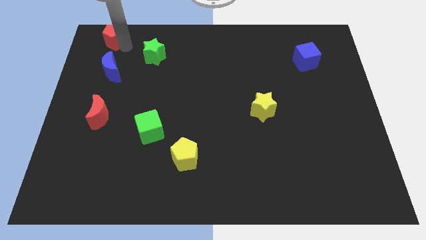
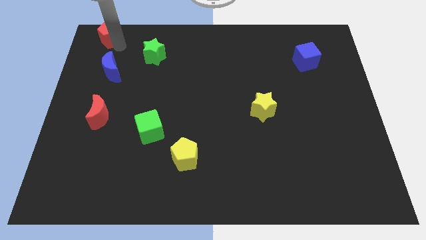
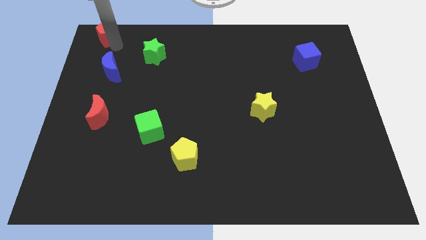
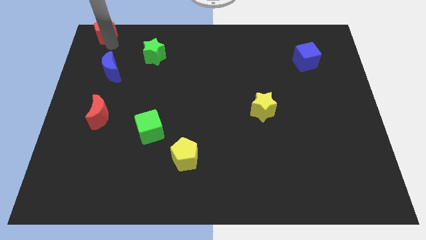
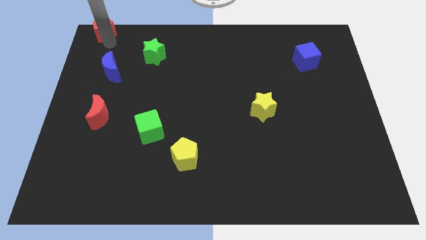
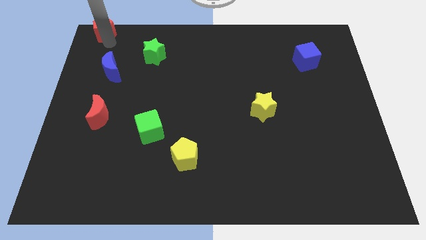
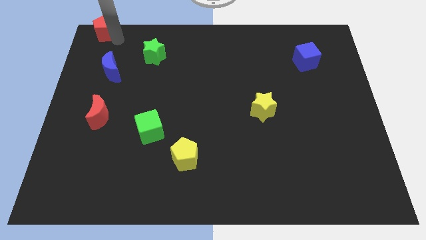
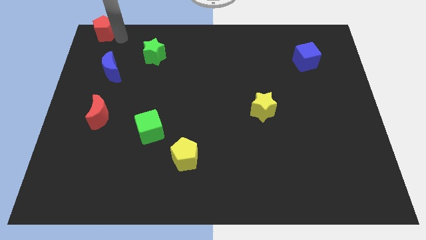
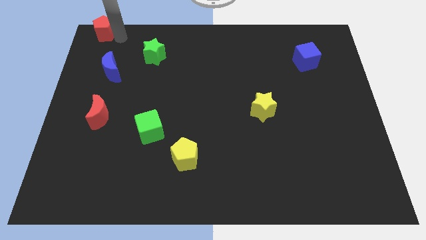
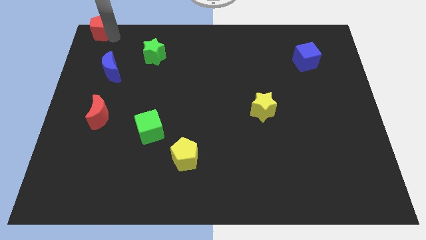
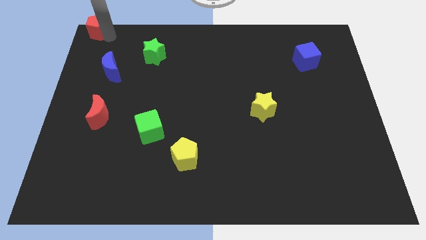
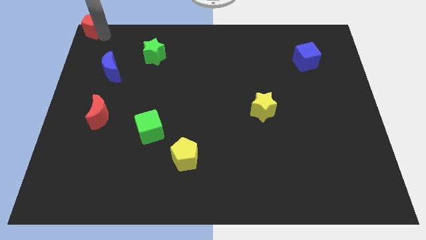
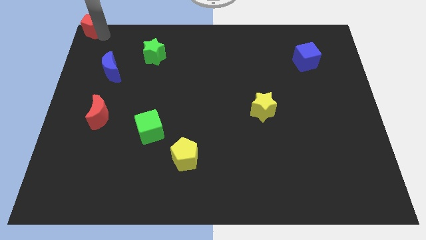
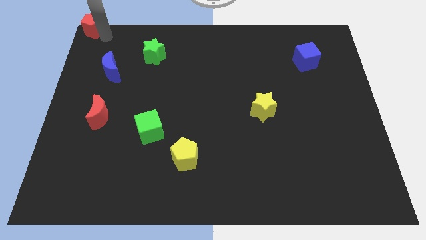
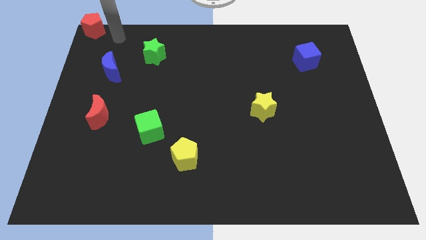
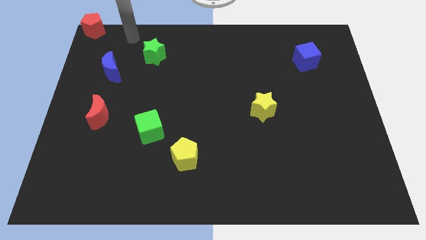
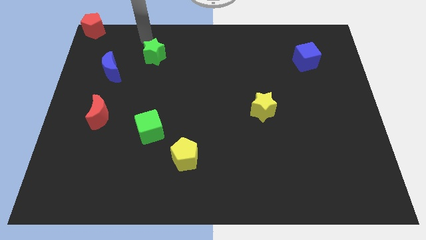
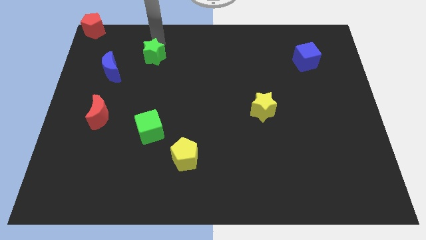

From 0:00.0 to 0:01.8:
move the red pentagon to the top left corner of the board

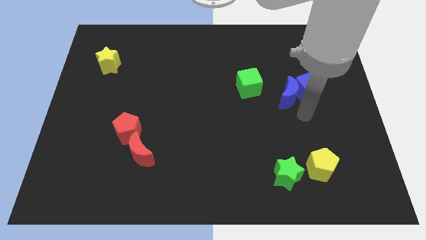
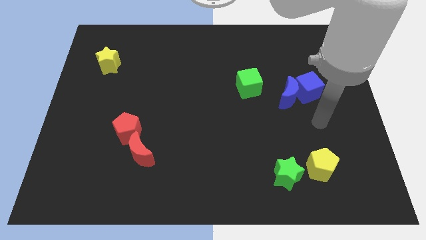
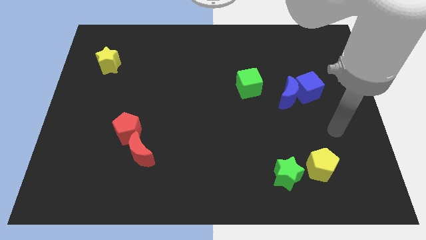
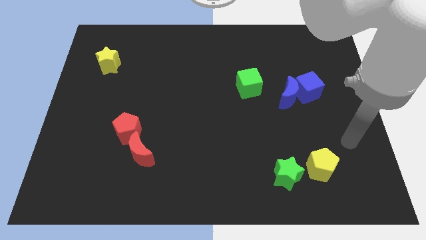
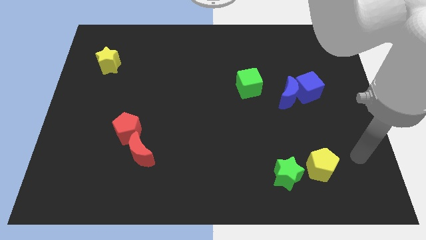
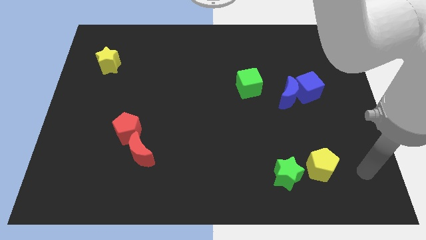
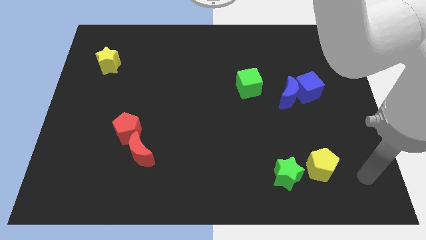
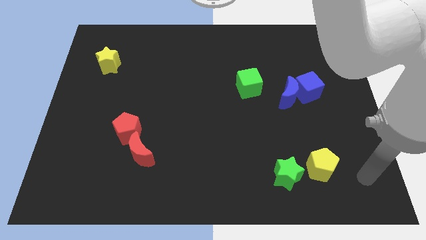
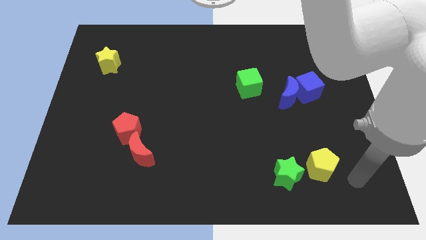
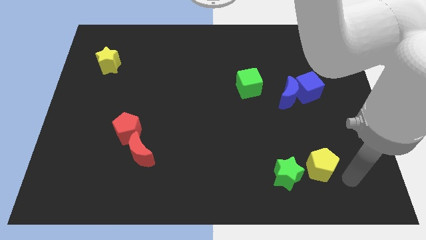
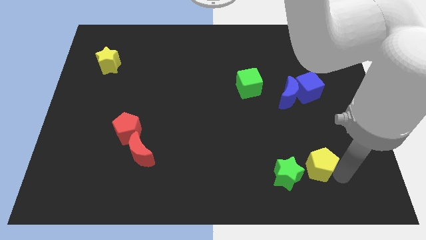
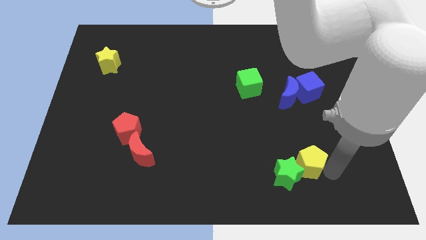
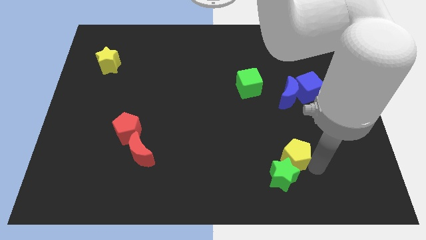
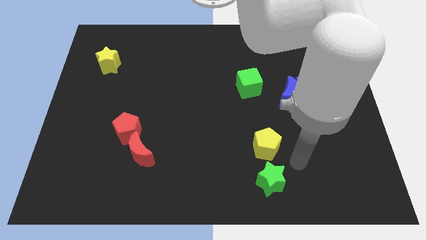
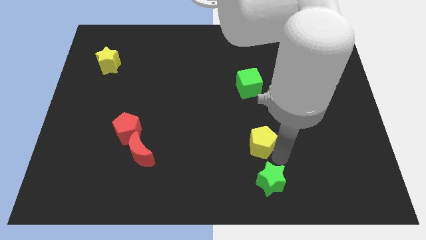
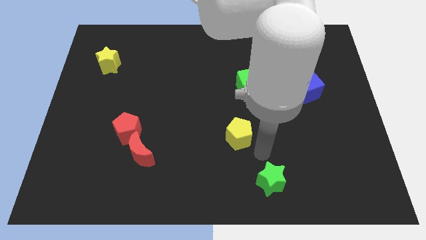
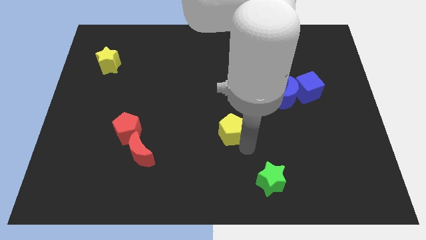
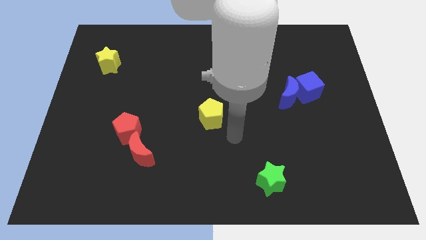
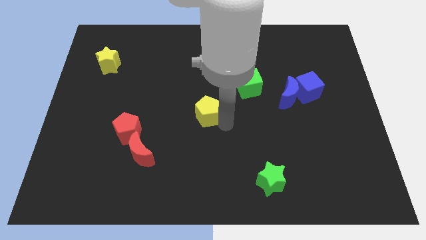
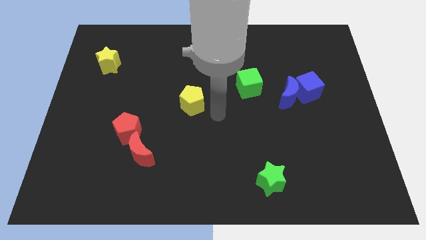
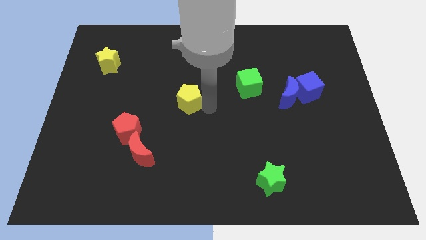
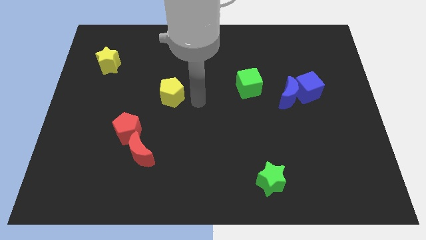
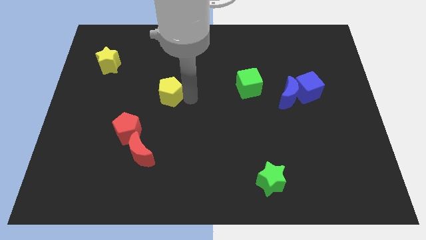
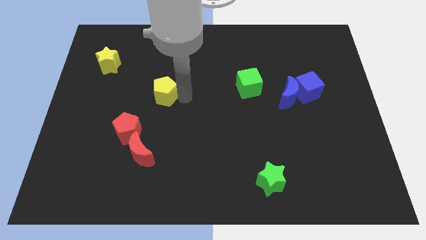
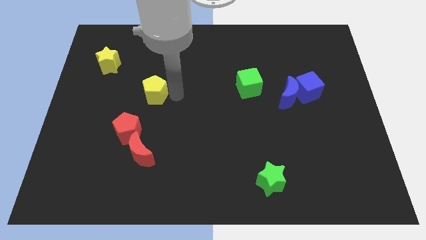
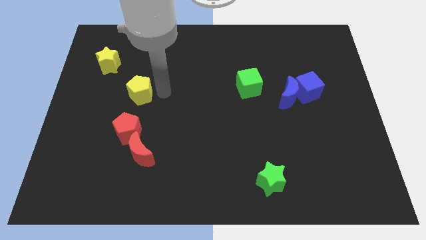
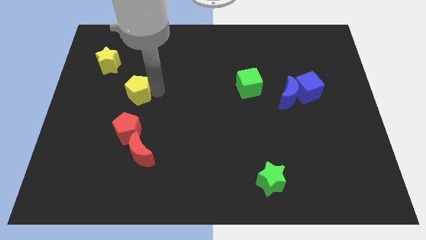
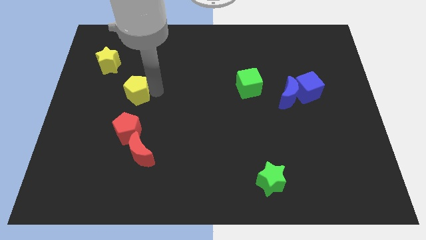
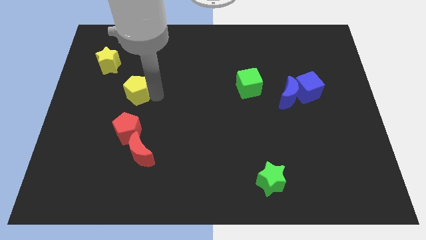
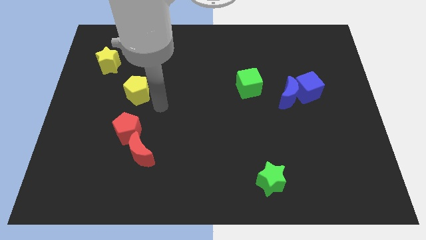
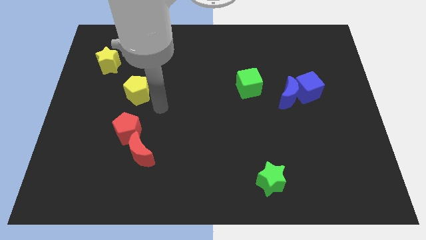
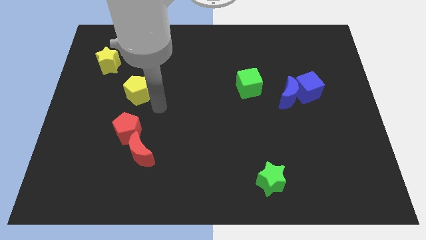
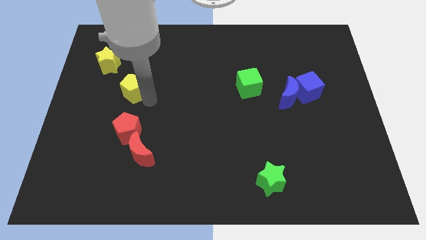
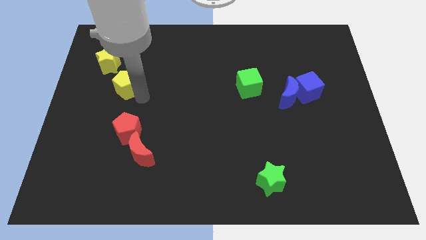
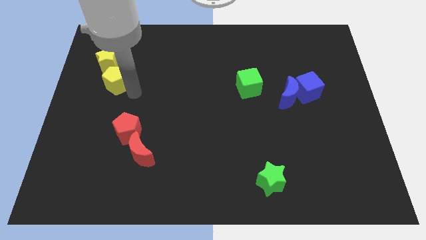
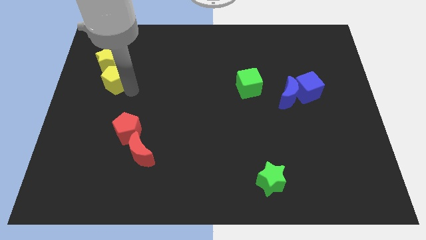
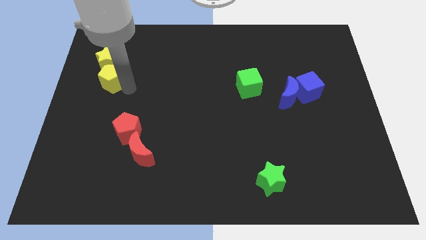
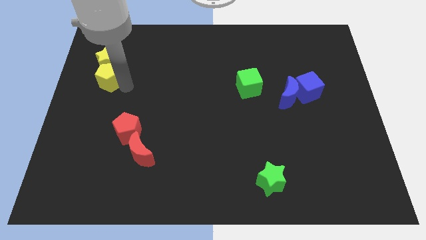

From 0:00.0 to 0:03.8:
place the yellow pentagon at the bottom of the yellow star

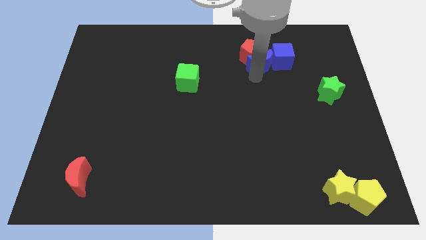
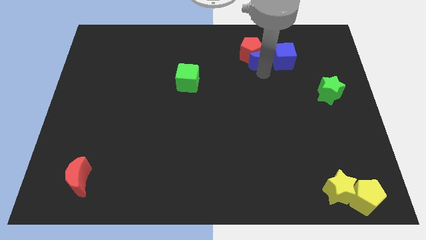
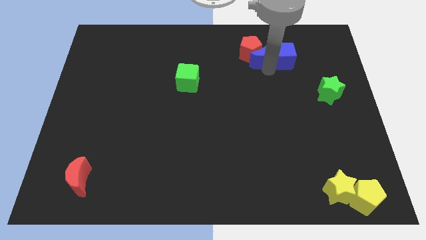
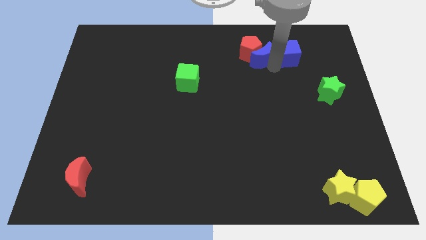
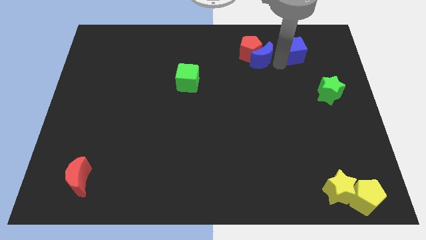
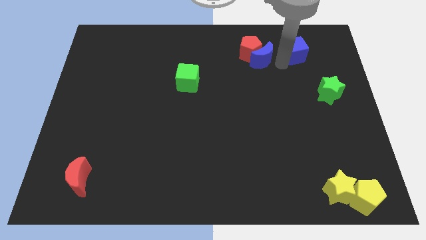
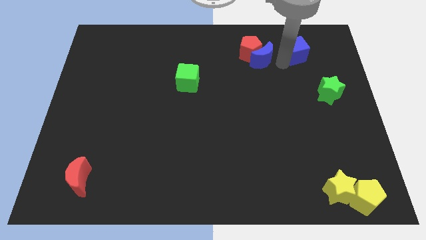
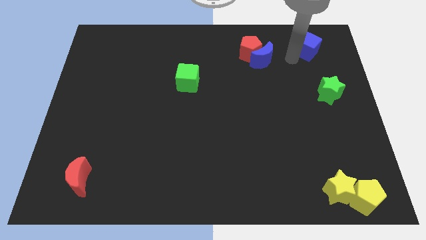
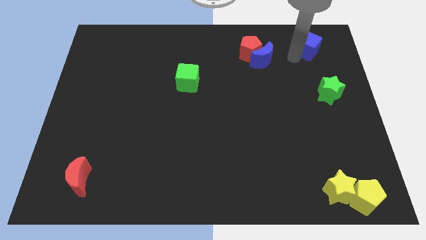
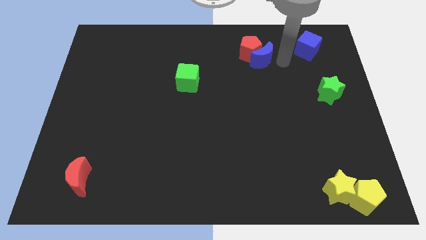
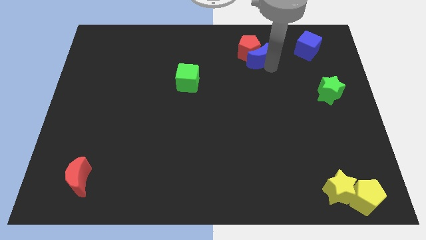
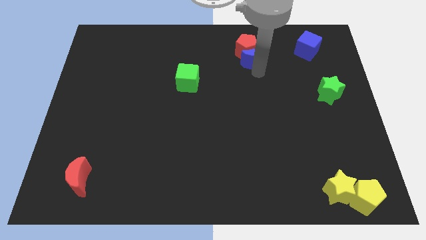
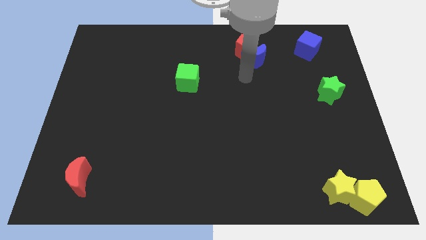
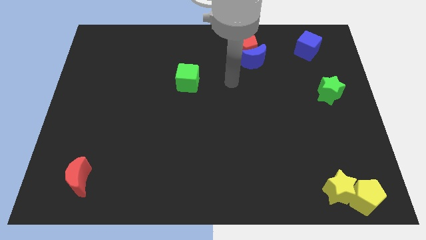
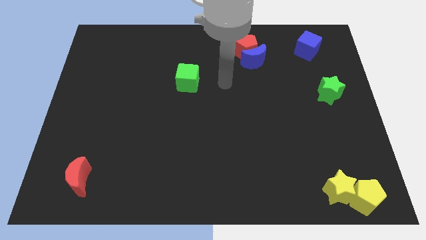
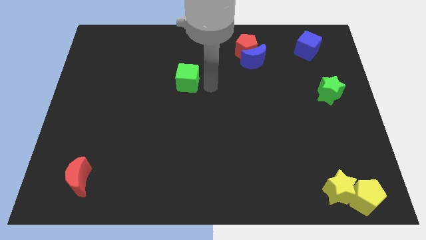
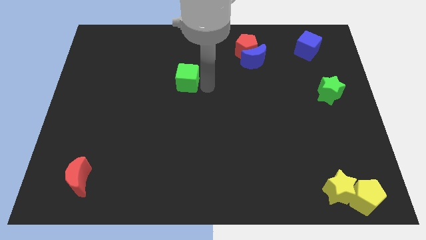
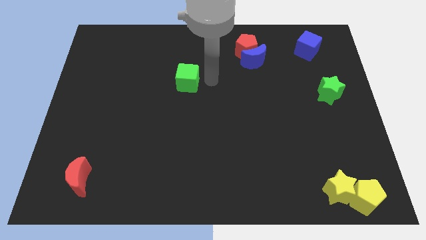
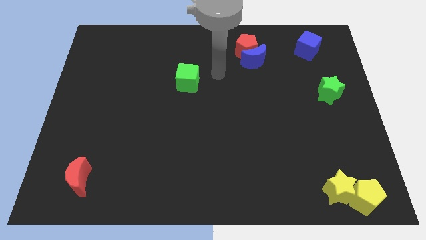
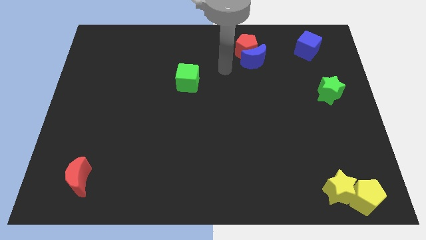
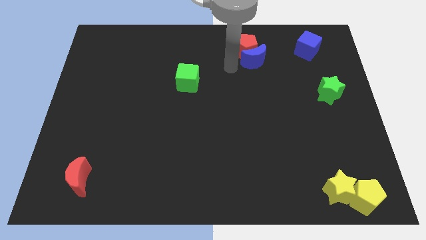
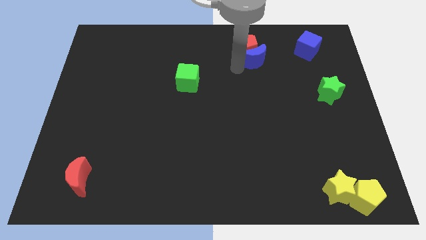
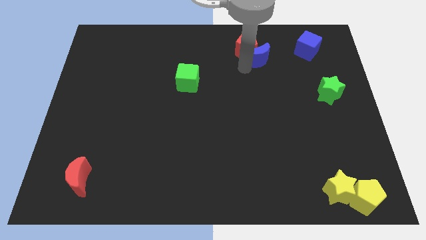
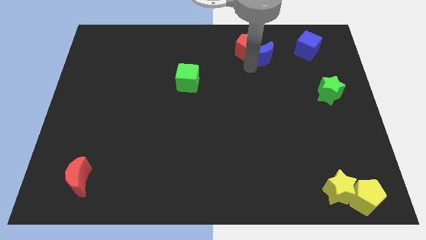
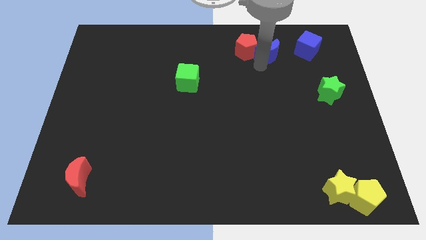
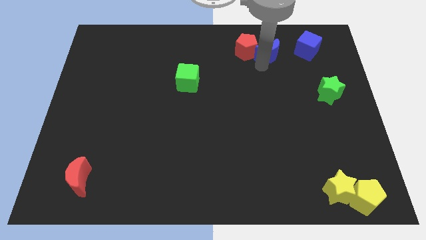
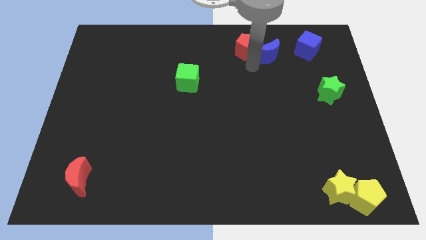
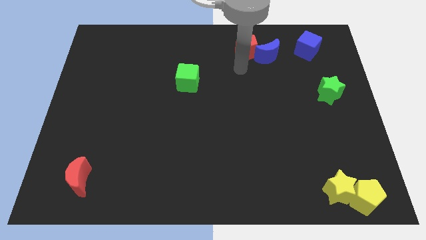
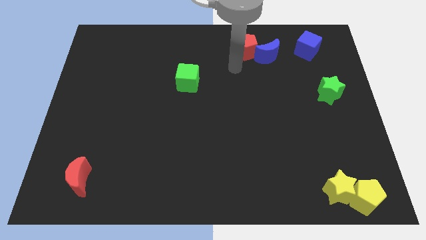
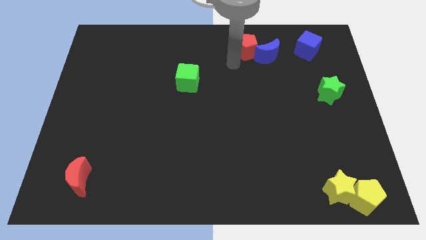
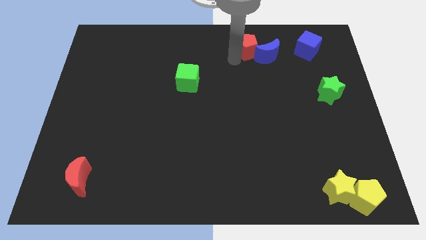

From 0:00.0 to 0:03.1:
push the blue cube and blue moon towards right side

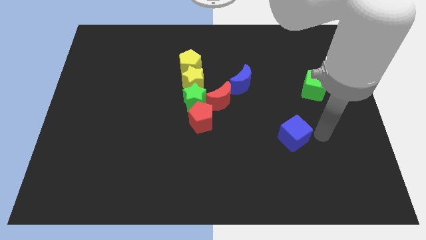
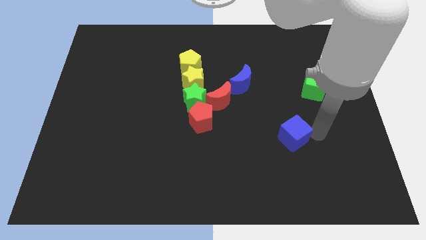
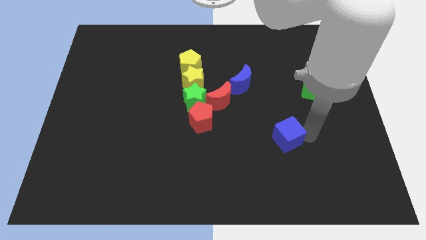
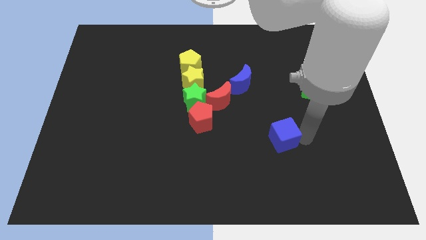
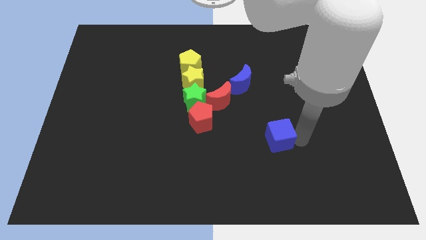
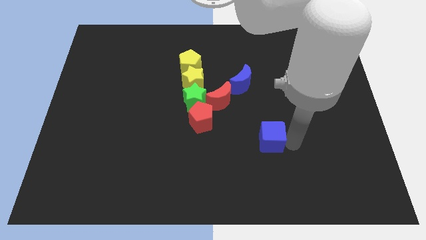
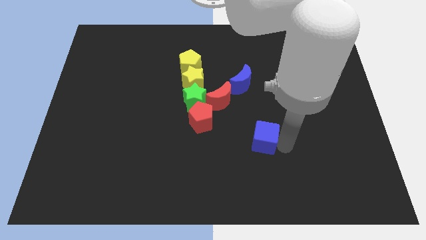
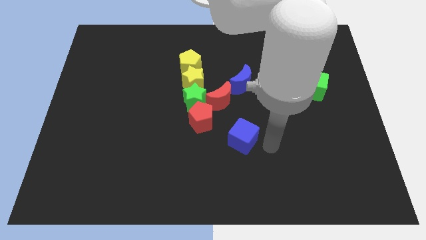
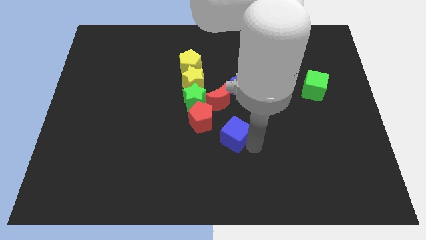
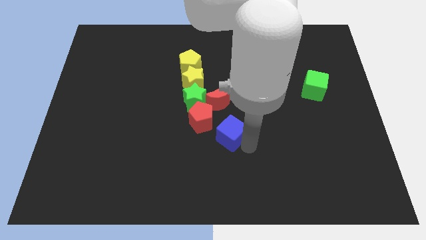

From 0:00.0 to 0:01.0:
place the blue cube below the red moon
